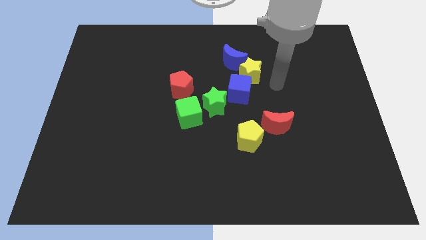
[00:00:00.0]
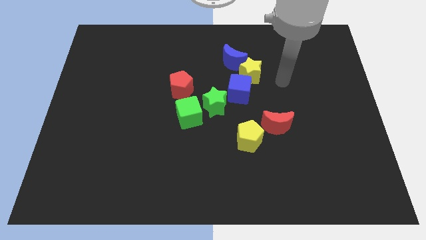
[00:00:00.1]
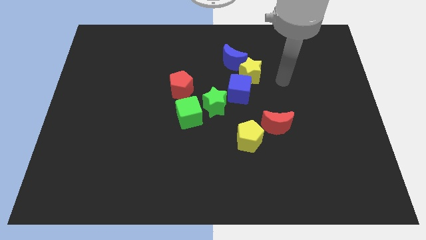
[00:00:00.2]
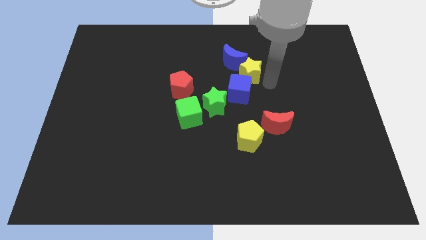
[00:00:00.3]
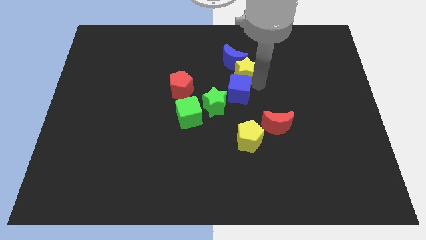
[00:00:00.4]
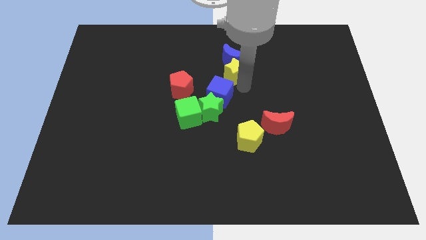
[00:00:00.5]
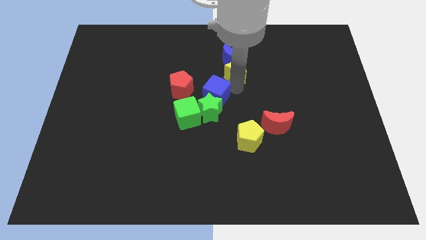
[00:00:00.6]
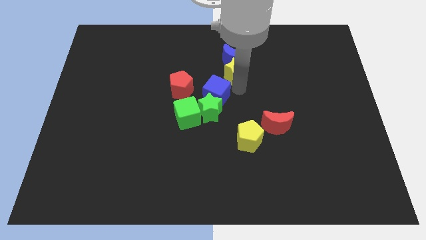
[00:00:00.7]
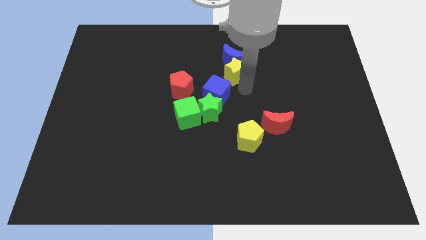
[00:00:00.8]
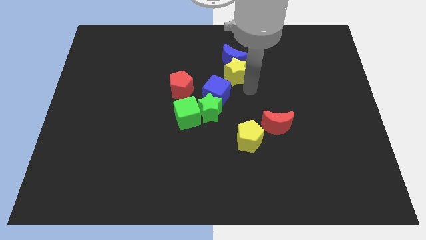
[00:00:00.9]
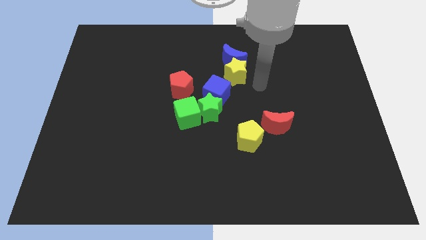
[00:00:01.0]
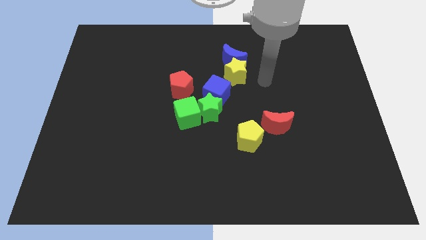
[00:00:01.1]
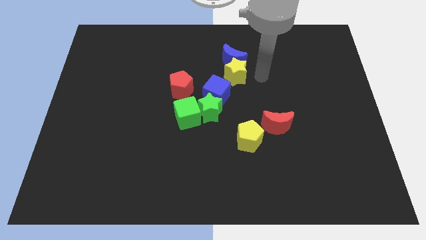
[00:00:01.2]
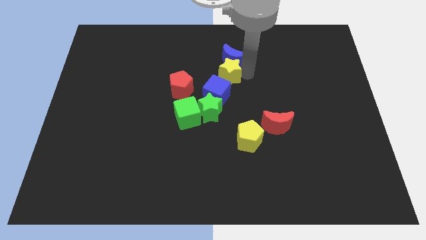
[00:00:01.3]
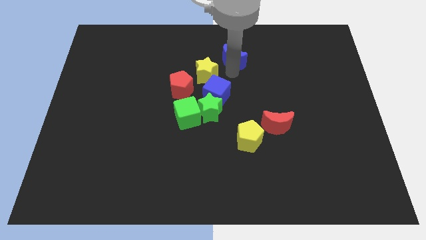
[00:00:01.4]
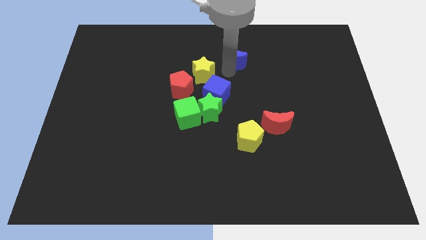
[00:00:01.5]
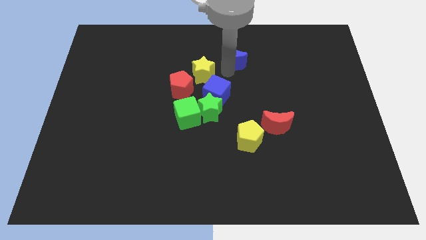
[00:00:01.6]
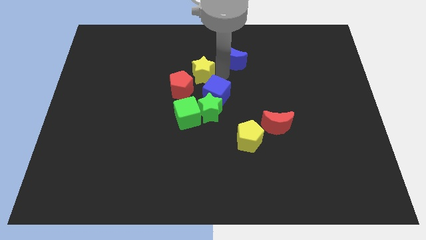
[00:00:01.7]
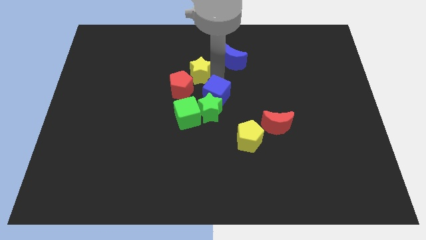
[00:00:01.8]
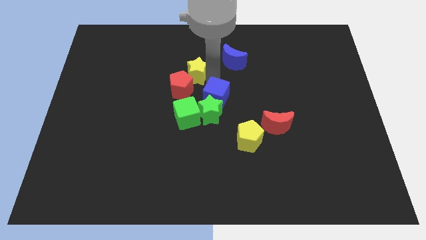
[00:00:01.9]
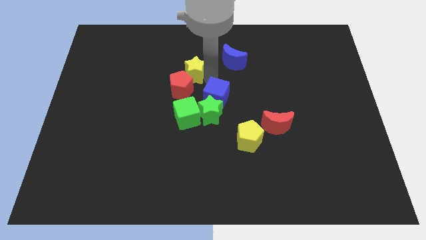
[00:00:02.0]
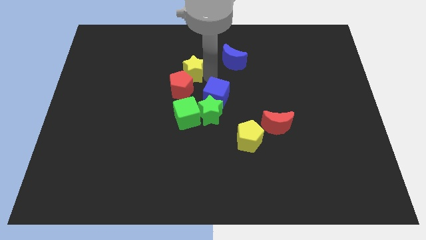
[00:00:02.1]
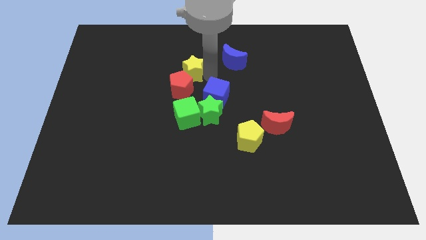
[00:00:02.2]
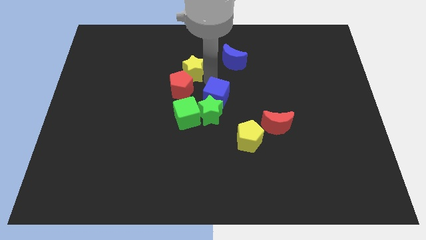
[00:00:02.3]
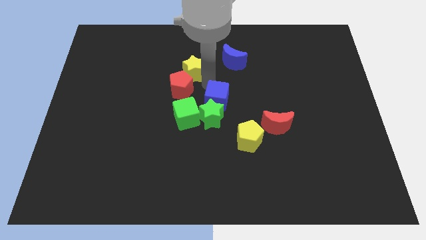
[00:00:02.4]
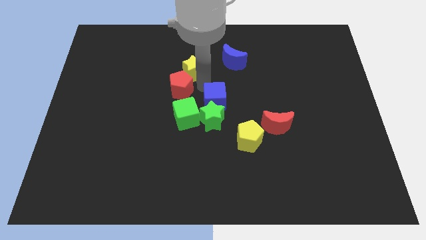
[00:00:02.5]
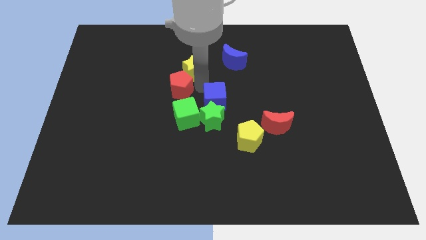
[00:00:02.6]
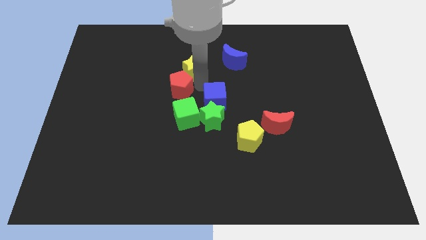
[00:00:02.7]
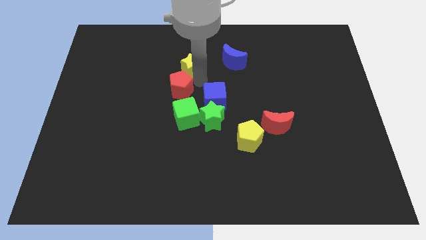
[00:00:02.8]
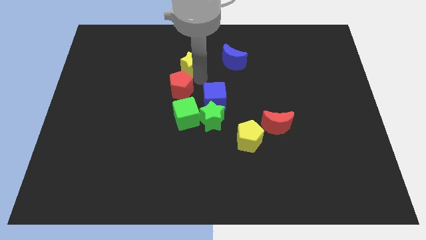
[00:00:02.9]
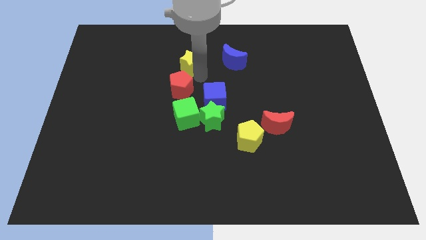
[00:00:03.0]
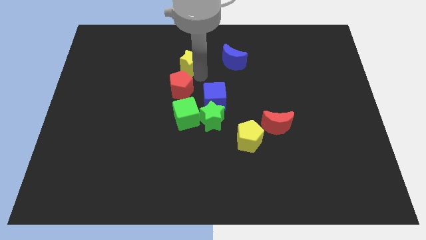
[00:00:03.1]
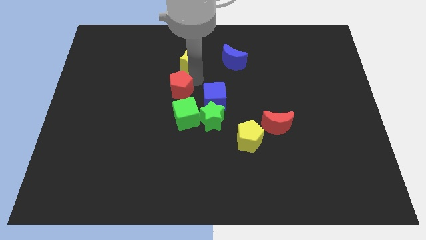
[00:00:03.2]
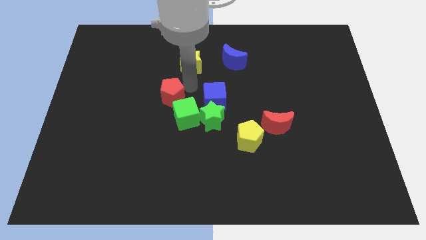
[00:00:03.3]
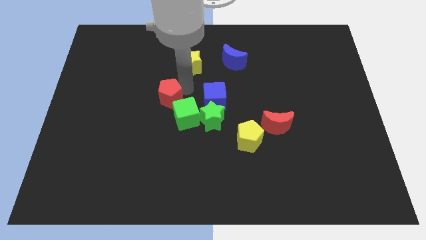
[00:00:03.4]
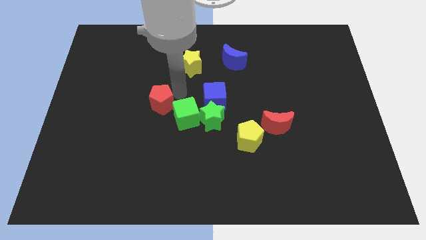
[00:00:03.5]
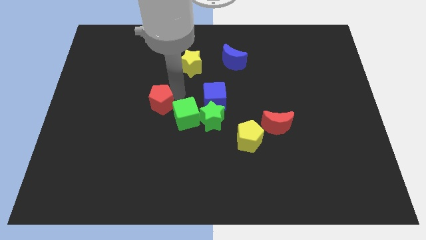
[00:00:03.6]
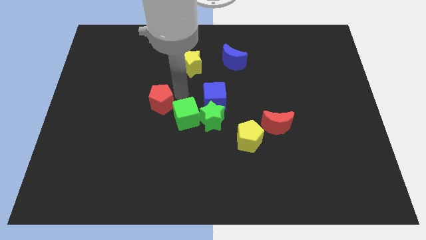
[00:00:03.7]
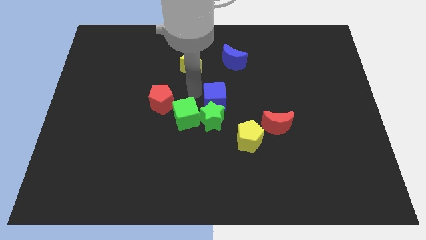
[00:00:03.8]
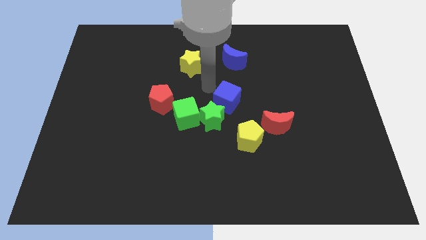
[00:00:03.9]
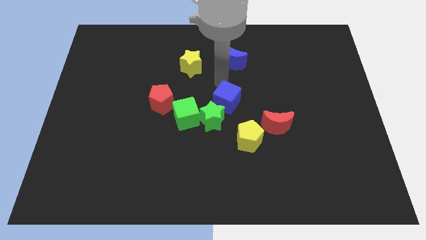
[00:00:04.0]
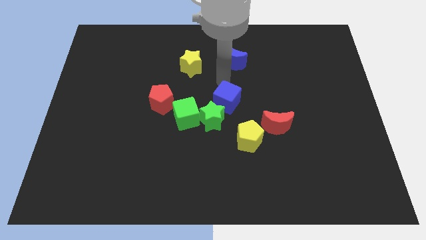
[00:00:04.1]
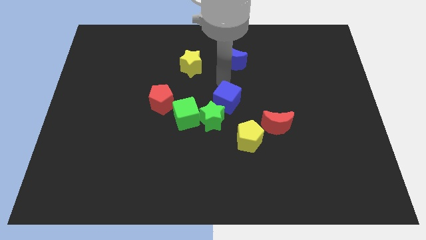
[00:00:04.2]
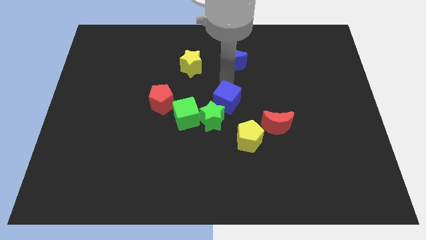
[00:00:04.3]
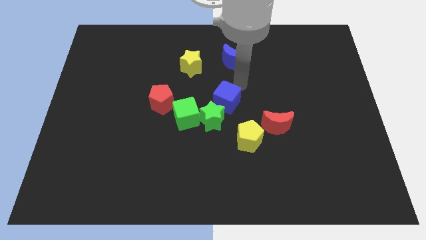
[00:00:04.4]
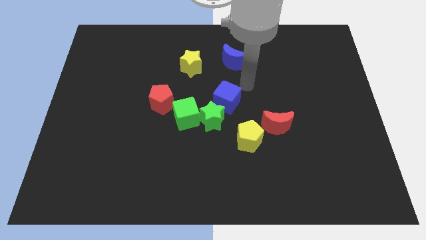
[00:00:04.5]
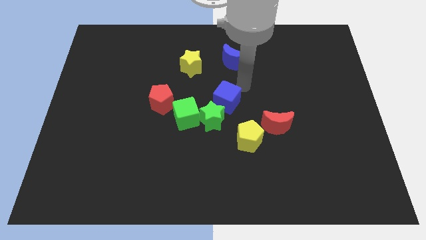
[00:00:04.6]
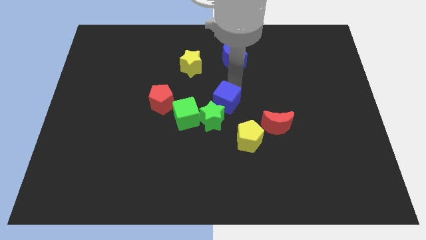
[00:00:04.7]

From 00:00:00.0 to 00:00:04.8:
separate the star from the group of blocks

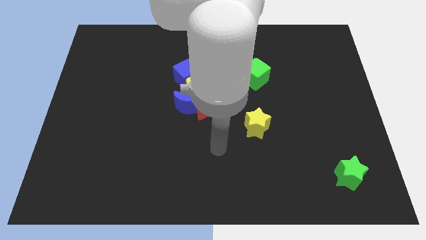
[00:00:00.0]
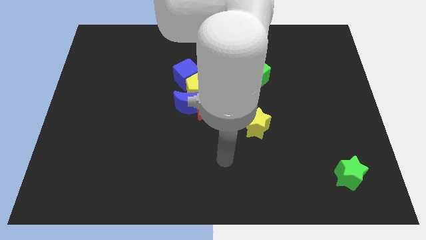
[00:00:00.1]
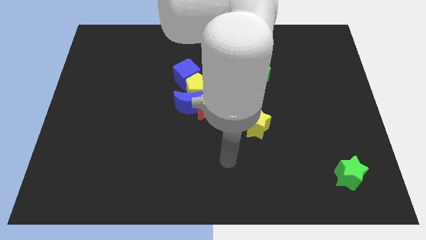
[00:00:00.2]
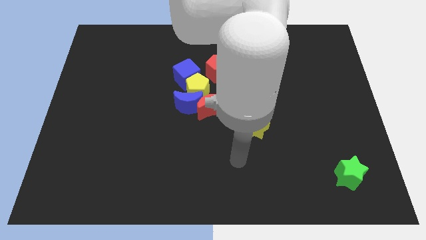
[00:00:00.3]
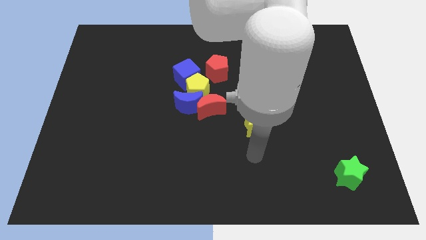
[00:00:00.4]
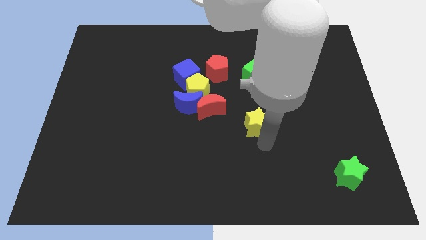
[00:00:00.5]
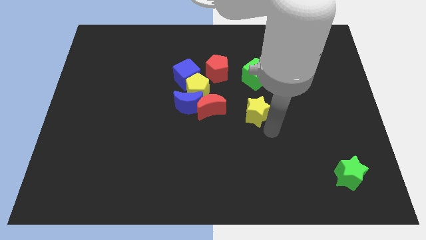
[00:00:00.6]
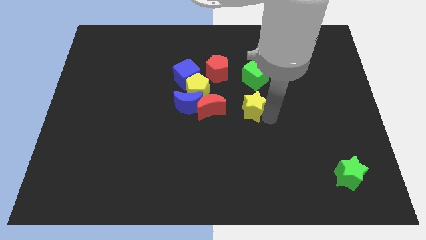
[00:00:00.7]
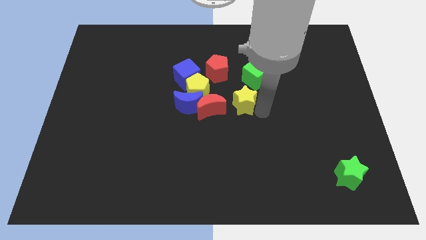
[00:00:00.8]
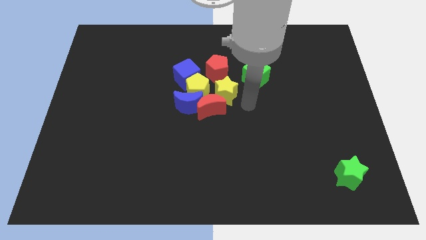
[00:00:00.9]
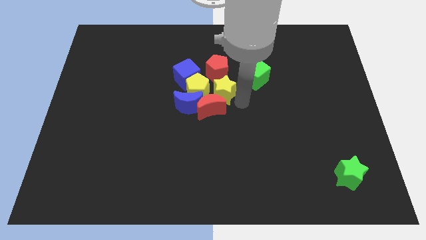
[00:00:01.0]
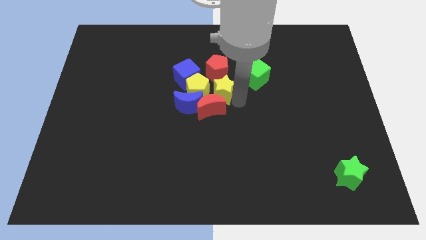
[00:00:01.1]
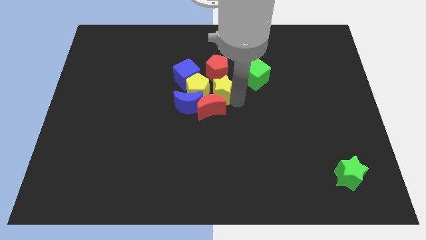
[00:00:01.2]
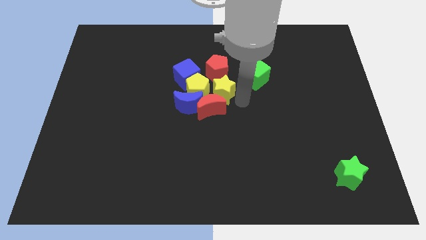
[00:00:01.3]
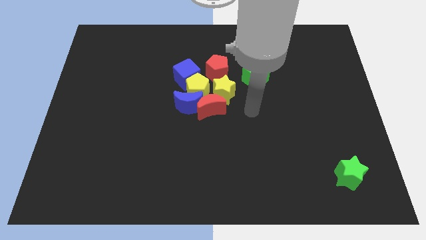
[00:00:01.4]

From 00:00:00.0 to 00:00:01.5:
push the yellow star close to the yellow pentagon

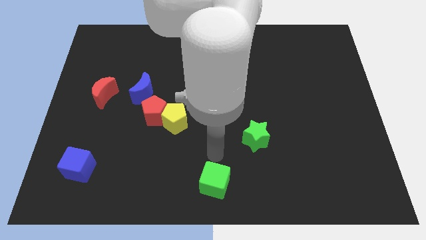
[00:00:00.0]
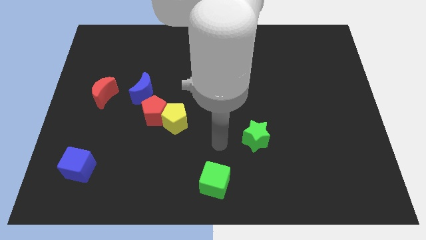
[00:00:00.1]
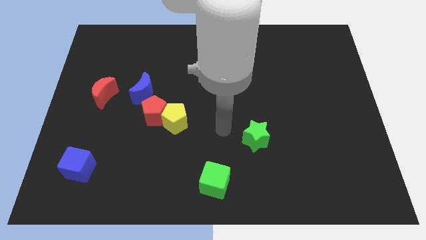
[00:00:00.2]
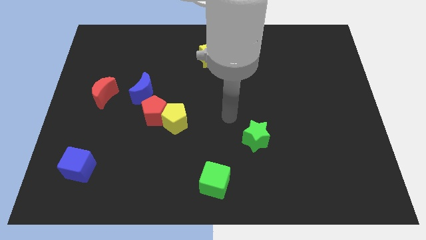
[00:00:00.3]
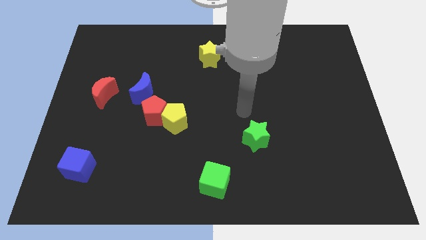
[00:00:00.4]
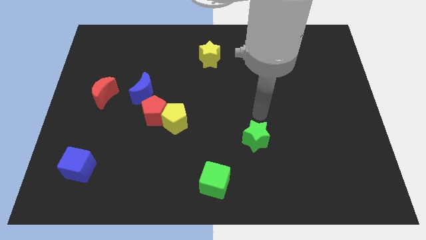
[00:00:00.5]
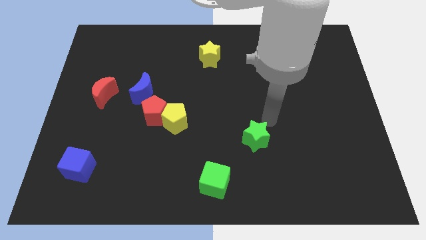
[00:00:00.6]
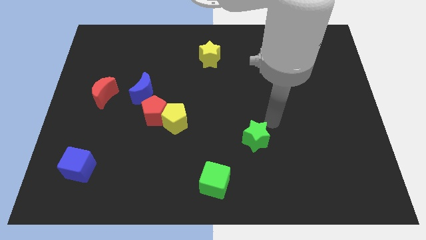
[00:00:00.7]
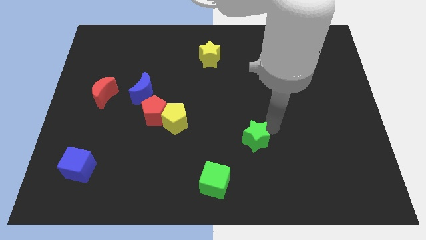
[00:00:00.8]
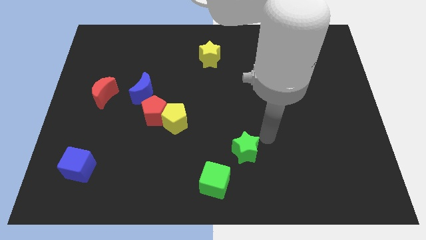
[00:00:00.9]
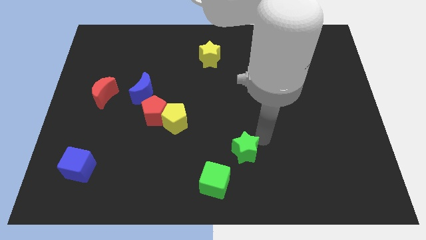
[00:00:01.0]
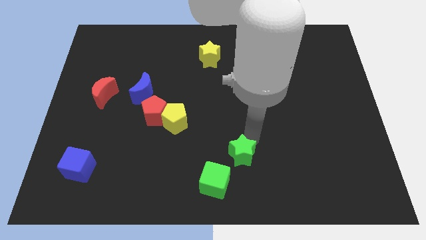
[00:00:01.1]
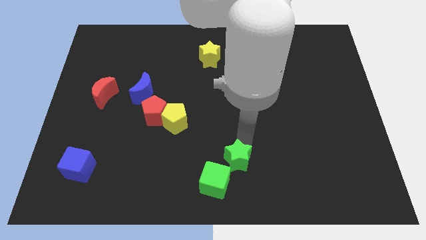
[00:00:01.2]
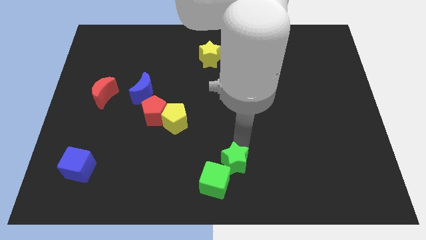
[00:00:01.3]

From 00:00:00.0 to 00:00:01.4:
place the green star to the top right side of the green cube

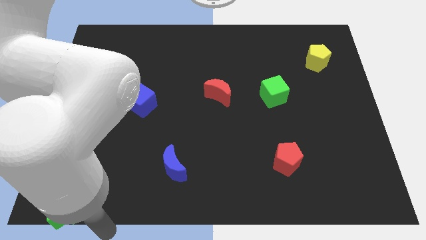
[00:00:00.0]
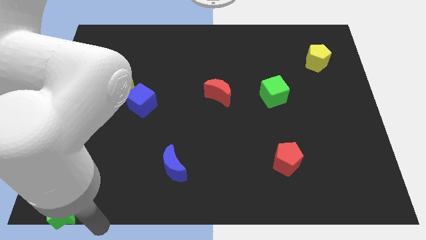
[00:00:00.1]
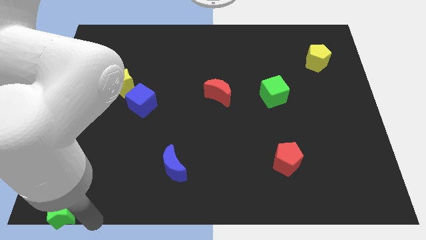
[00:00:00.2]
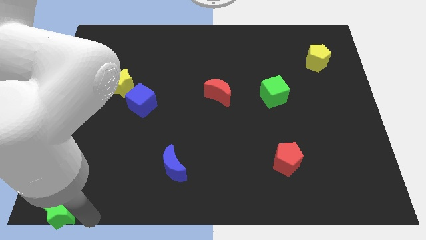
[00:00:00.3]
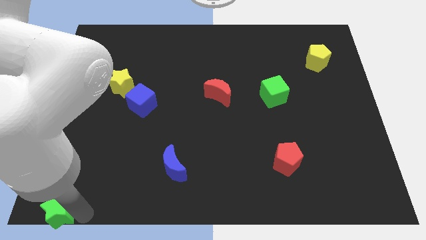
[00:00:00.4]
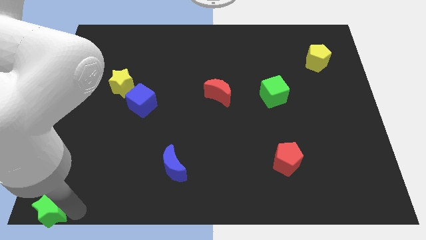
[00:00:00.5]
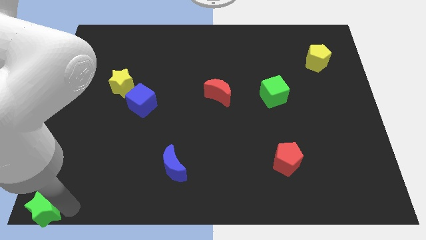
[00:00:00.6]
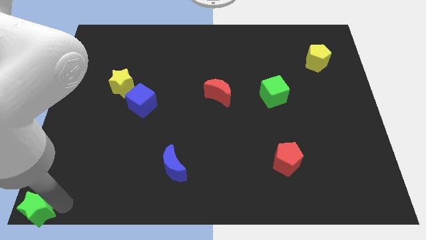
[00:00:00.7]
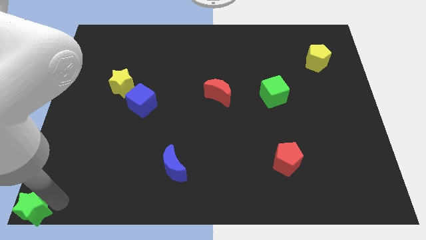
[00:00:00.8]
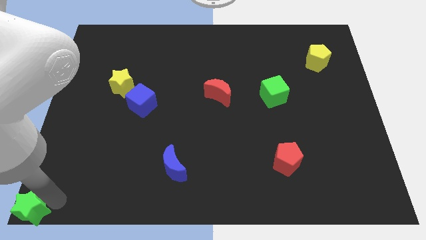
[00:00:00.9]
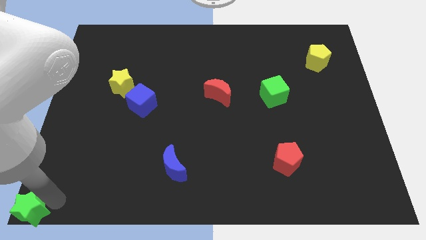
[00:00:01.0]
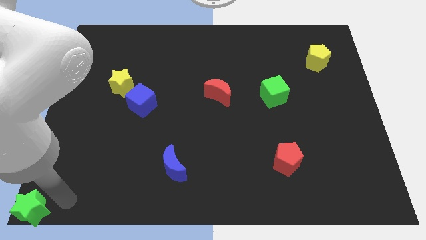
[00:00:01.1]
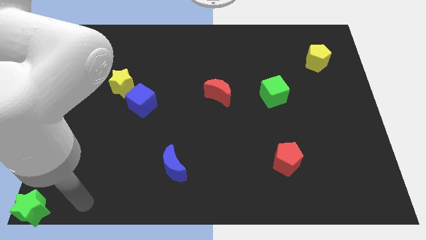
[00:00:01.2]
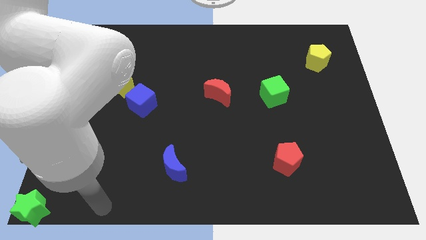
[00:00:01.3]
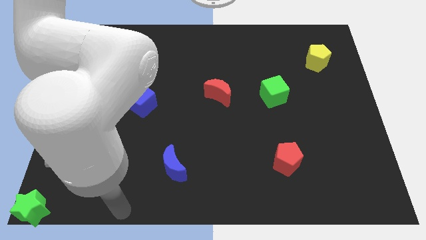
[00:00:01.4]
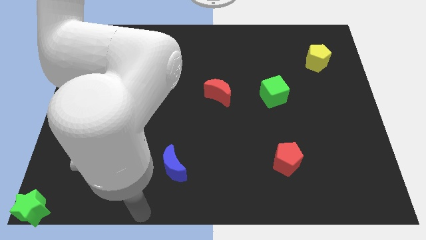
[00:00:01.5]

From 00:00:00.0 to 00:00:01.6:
move the green star to the bottom left
